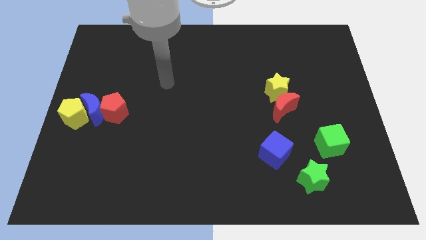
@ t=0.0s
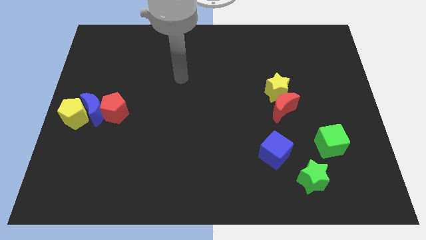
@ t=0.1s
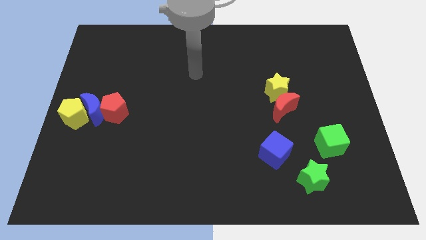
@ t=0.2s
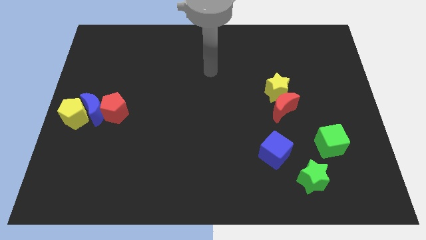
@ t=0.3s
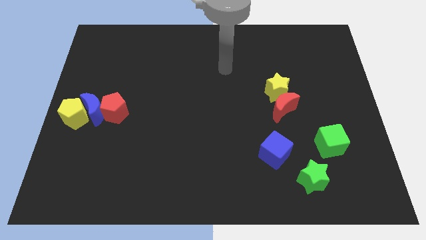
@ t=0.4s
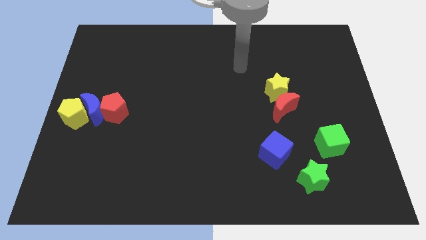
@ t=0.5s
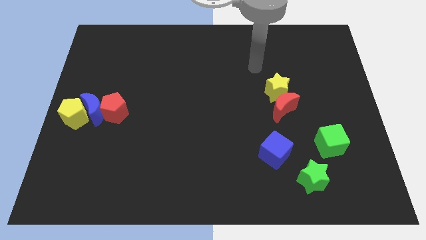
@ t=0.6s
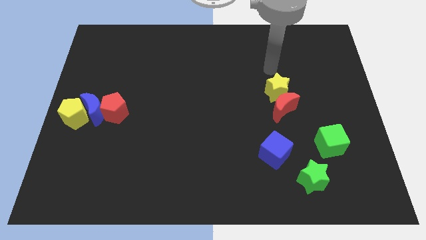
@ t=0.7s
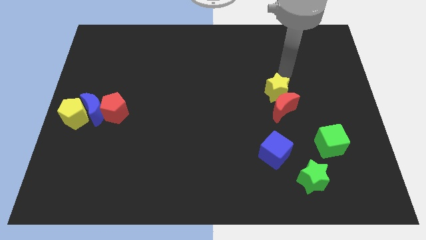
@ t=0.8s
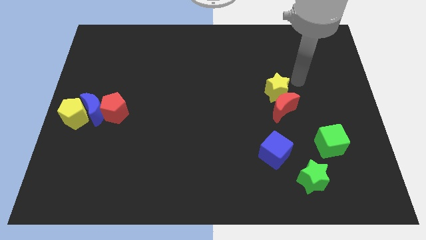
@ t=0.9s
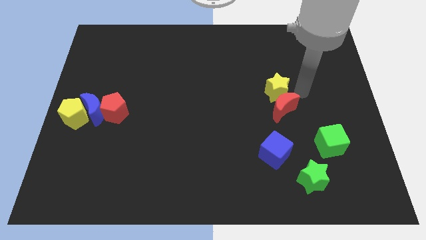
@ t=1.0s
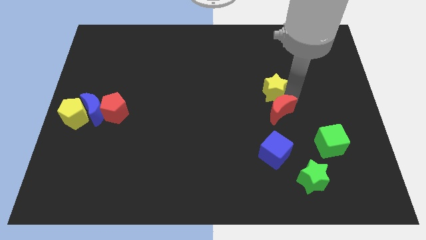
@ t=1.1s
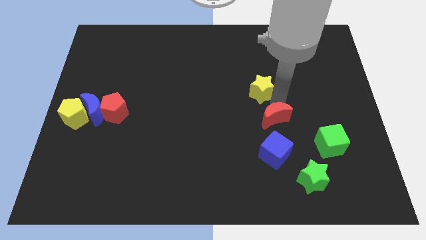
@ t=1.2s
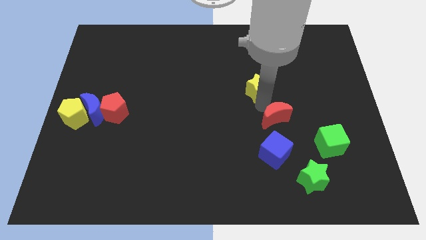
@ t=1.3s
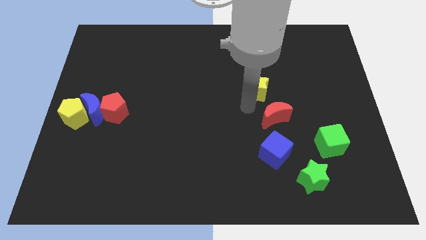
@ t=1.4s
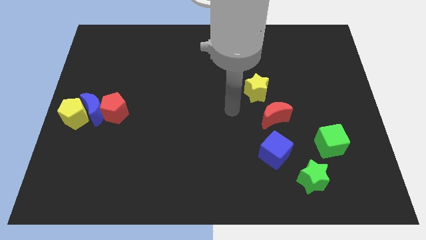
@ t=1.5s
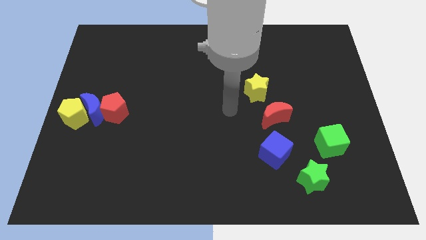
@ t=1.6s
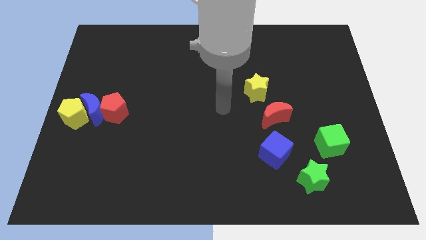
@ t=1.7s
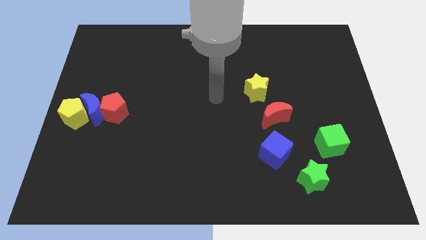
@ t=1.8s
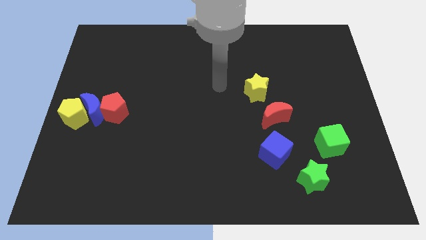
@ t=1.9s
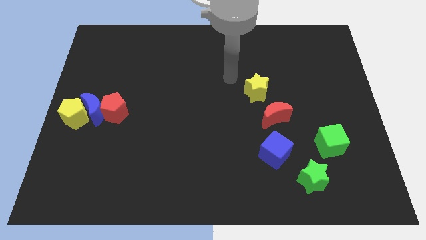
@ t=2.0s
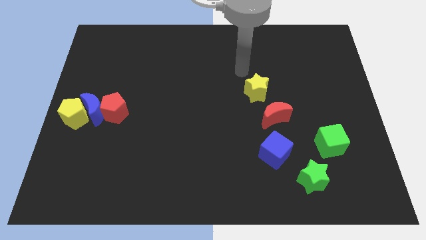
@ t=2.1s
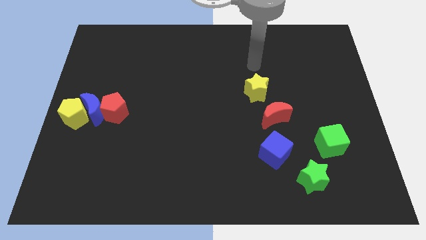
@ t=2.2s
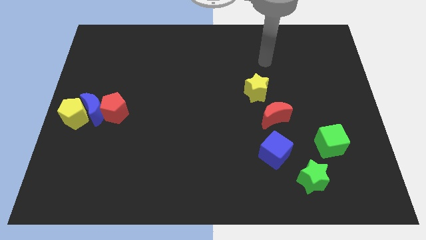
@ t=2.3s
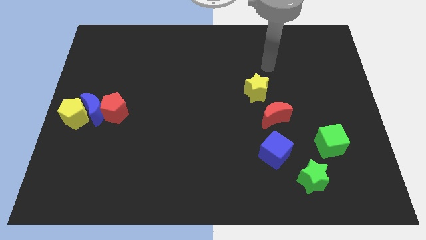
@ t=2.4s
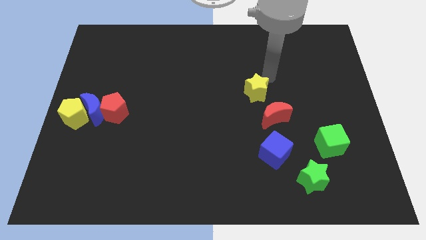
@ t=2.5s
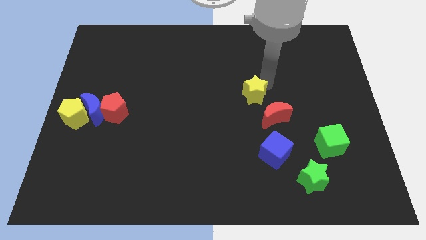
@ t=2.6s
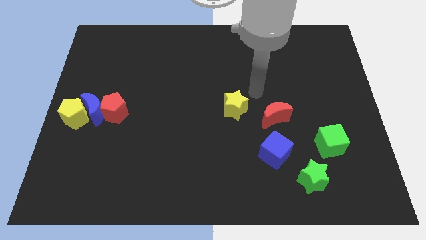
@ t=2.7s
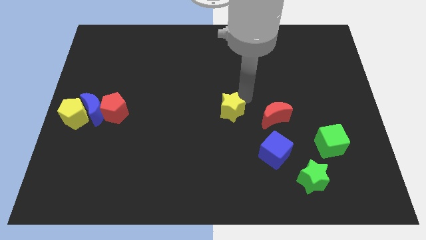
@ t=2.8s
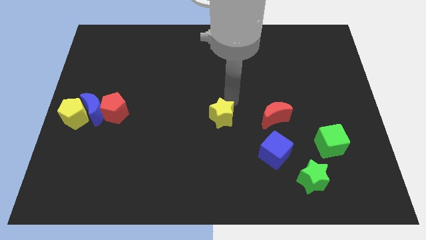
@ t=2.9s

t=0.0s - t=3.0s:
separate the yellow star from the red crescent

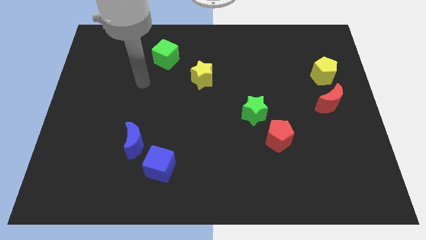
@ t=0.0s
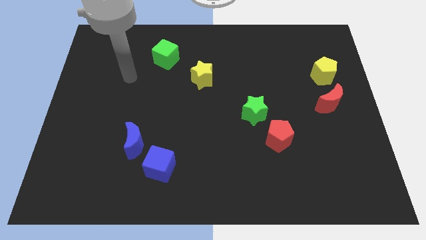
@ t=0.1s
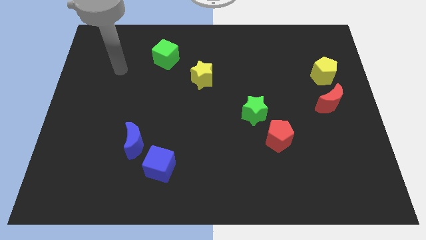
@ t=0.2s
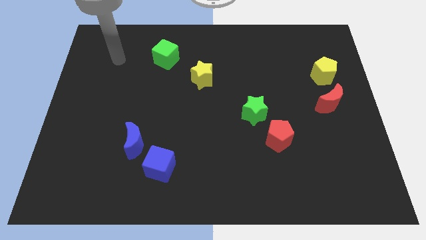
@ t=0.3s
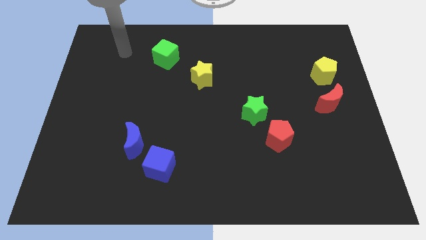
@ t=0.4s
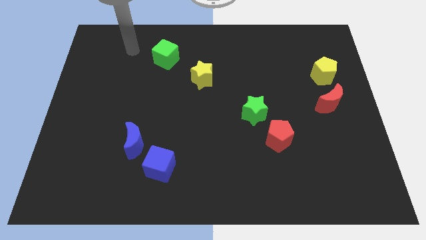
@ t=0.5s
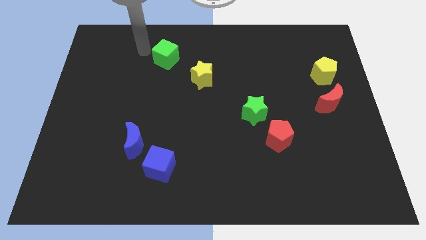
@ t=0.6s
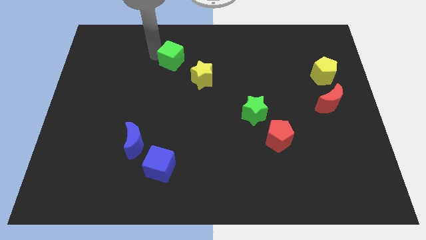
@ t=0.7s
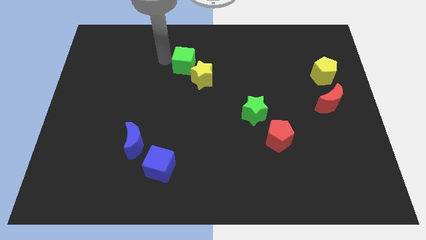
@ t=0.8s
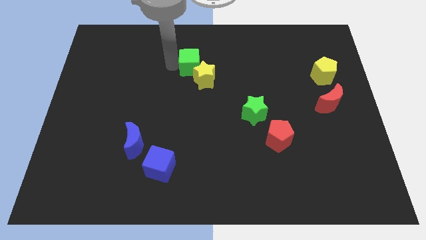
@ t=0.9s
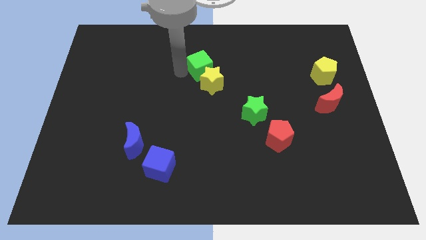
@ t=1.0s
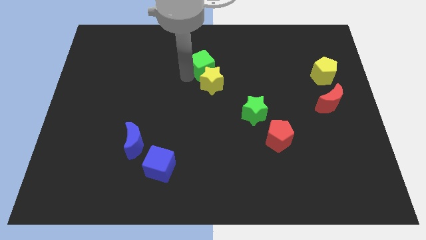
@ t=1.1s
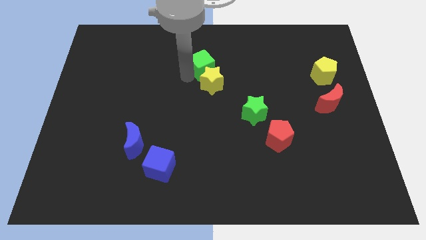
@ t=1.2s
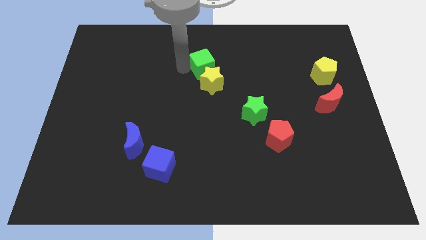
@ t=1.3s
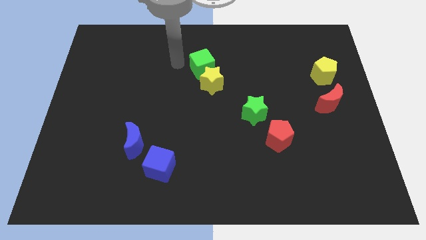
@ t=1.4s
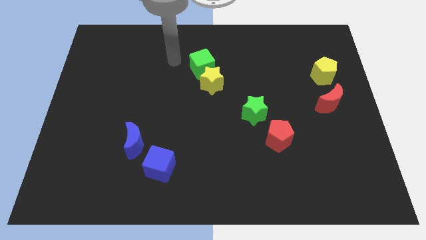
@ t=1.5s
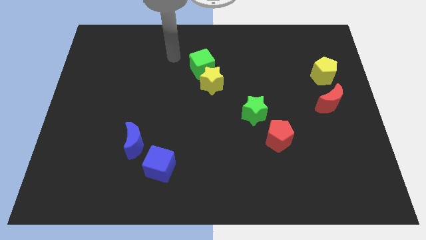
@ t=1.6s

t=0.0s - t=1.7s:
put green cube into the yellow star

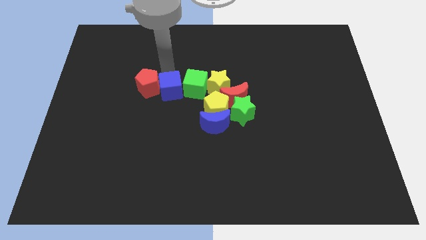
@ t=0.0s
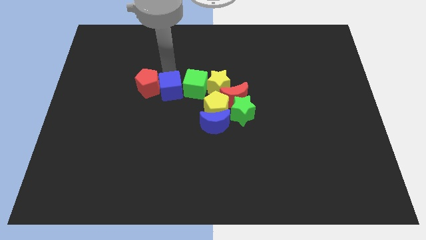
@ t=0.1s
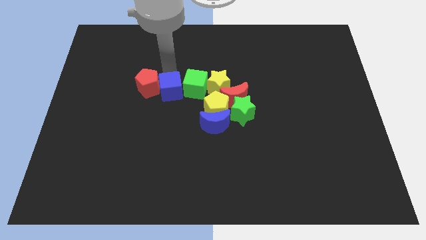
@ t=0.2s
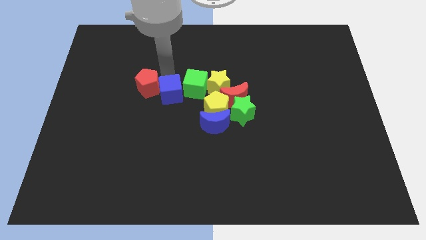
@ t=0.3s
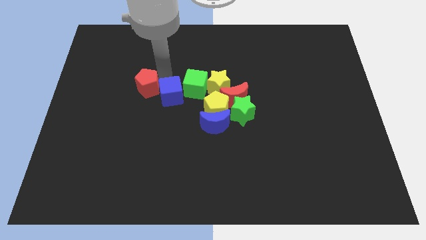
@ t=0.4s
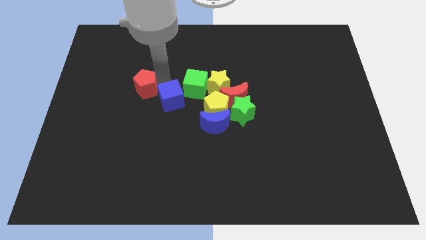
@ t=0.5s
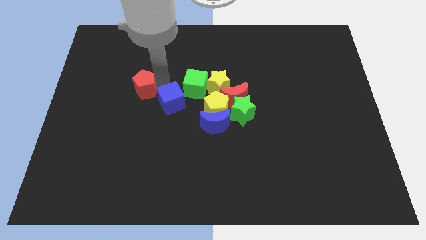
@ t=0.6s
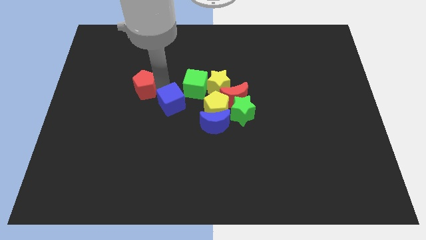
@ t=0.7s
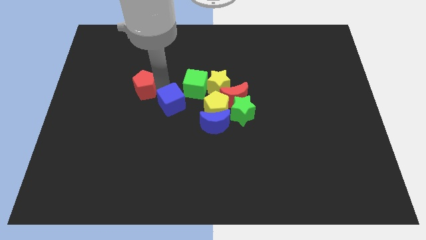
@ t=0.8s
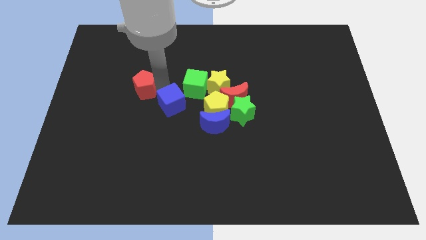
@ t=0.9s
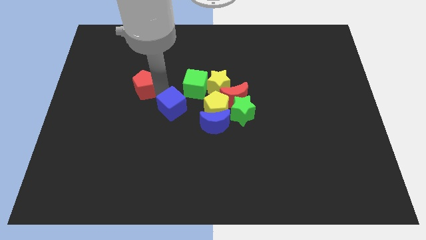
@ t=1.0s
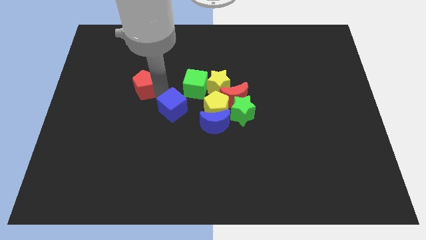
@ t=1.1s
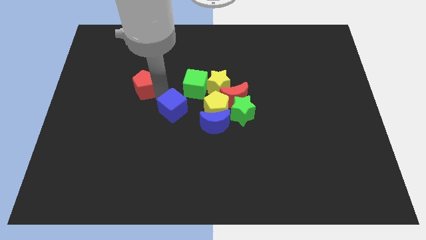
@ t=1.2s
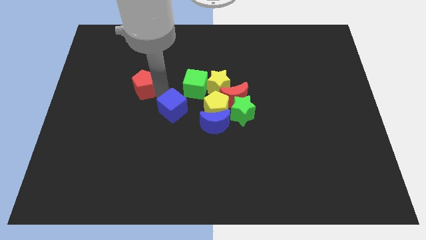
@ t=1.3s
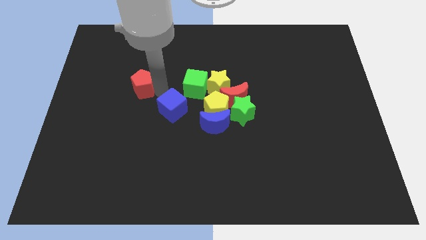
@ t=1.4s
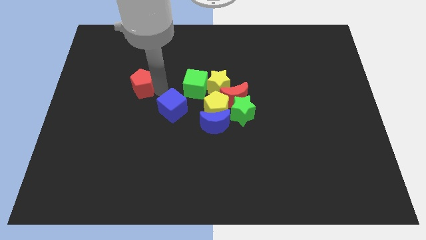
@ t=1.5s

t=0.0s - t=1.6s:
slide the blue cube to the bottom left side of the green cube

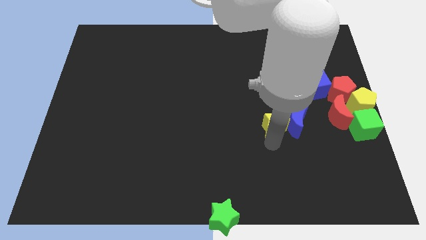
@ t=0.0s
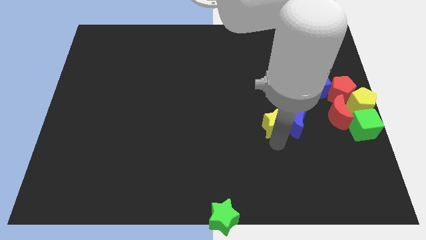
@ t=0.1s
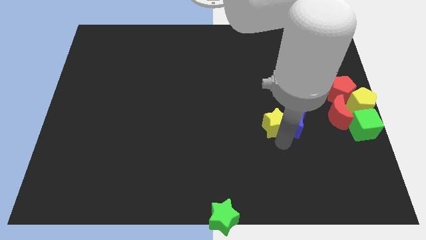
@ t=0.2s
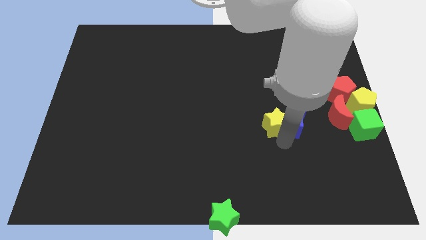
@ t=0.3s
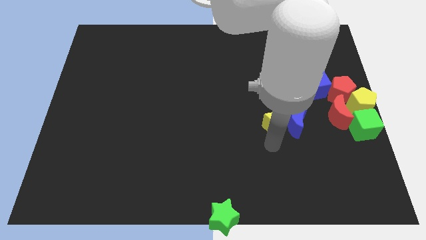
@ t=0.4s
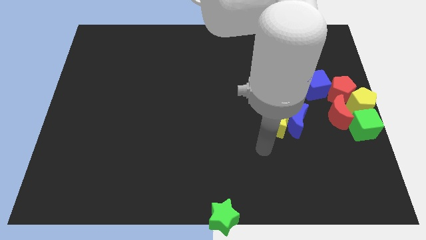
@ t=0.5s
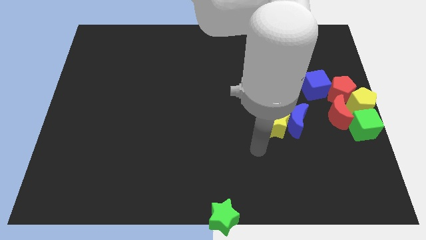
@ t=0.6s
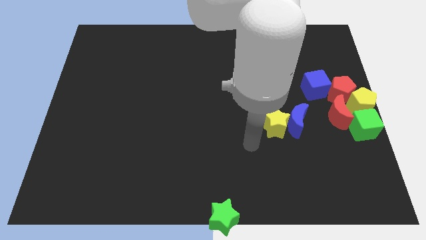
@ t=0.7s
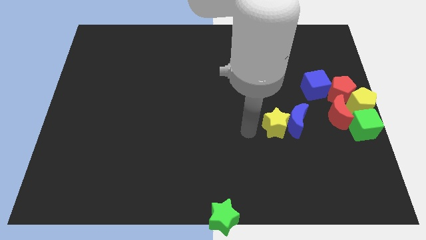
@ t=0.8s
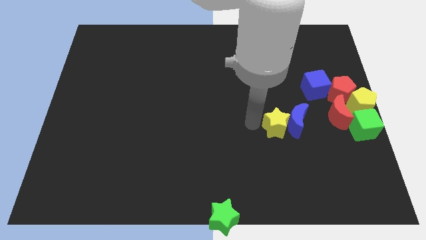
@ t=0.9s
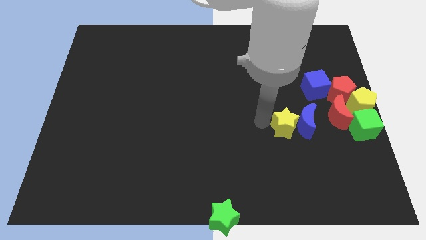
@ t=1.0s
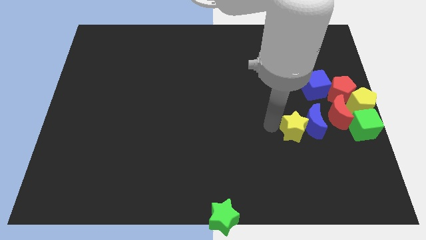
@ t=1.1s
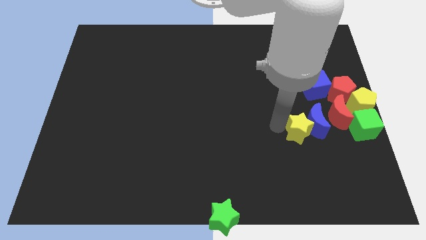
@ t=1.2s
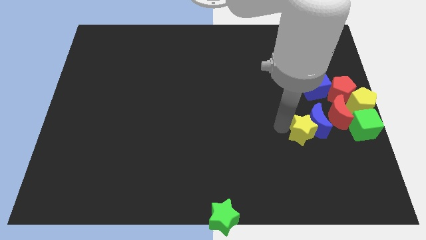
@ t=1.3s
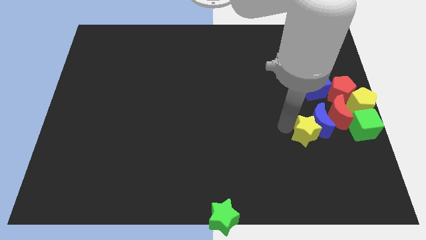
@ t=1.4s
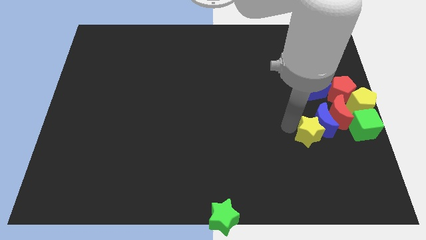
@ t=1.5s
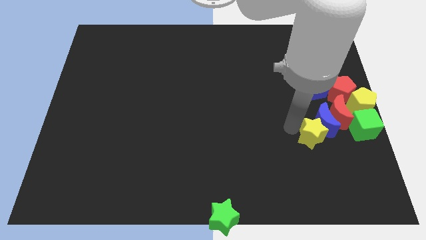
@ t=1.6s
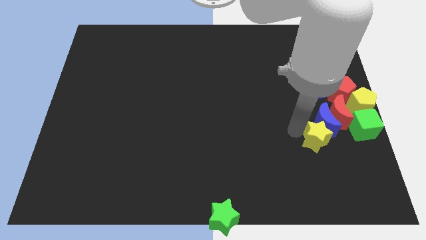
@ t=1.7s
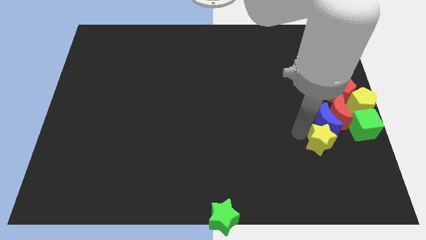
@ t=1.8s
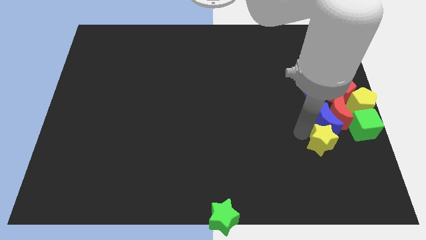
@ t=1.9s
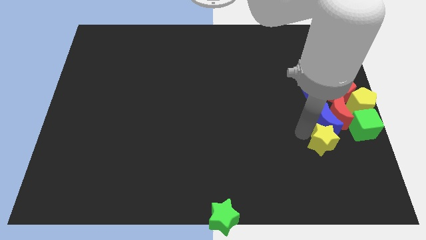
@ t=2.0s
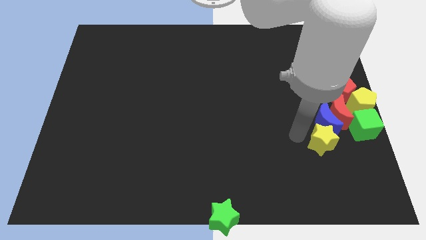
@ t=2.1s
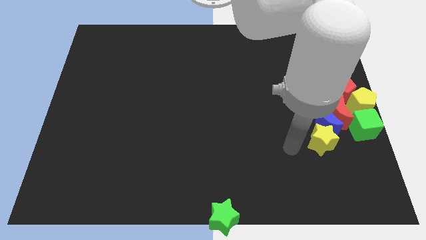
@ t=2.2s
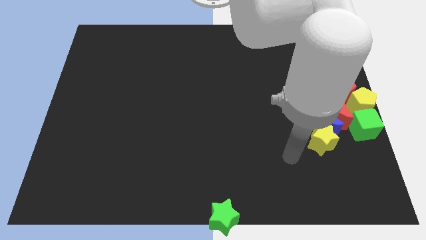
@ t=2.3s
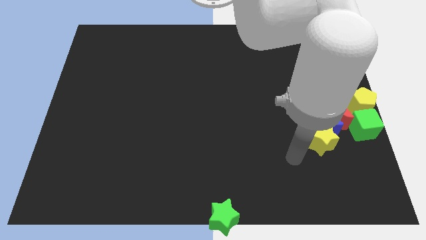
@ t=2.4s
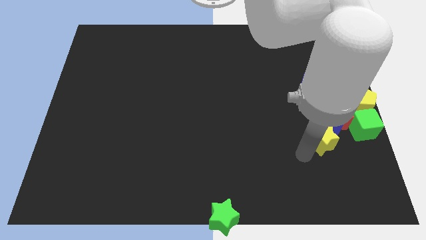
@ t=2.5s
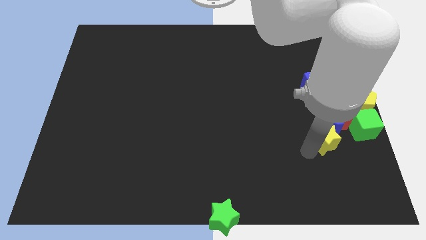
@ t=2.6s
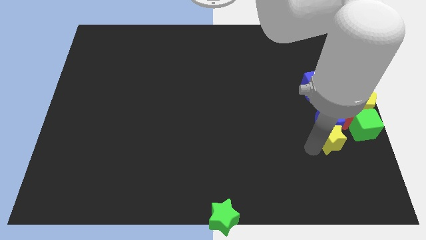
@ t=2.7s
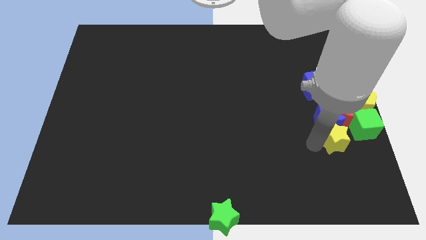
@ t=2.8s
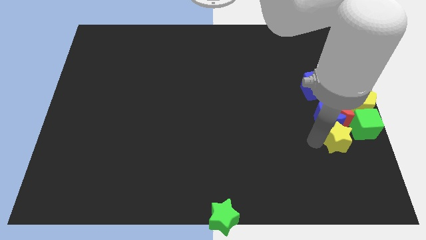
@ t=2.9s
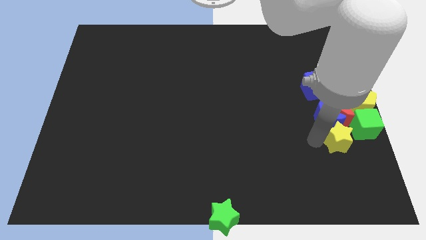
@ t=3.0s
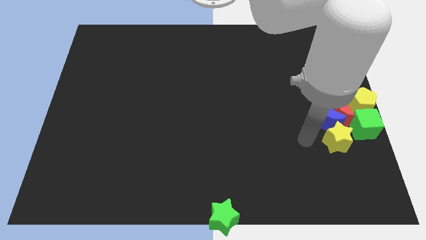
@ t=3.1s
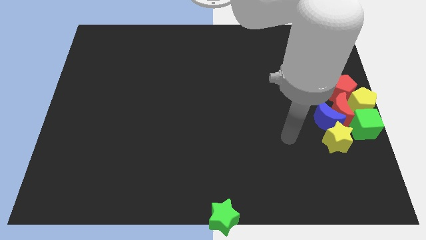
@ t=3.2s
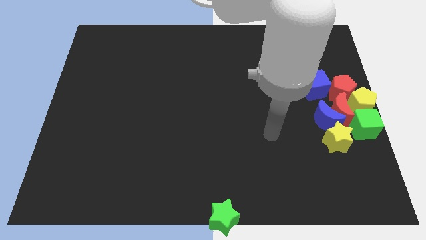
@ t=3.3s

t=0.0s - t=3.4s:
place yellow star to the bottom of blue moon
